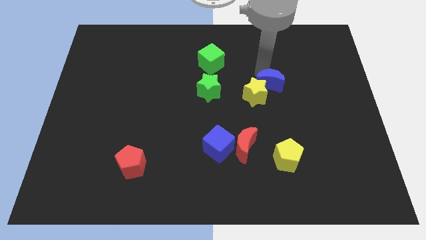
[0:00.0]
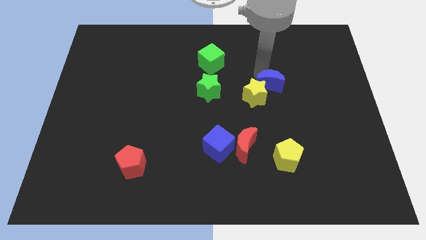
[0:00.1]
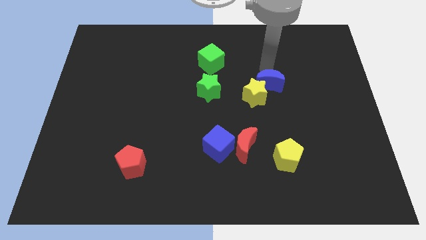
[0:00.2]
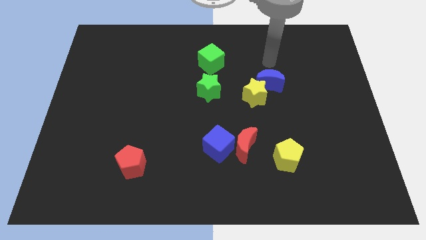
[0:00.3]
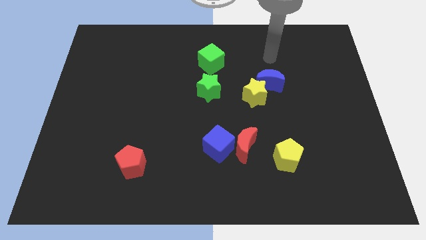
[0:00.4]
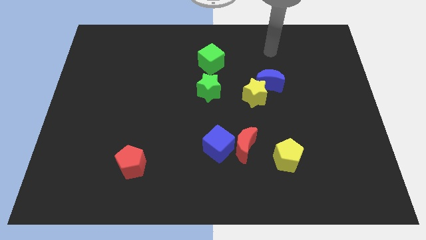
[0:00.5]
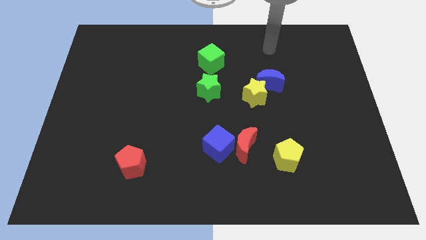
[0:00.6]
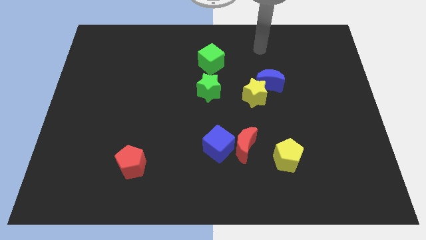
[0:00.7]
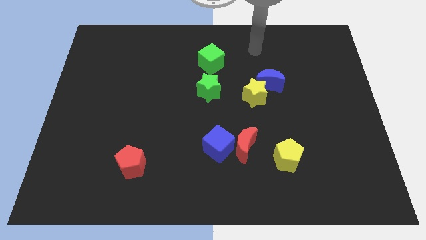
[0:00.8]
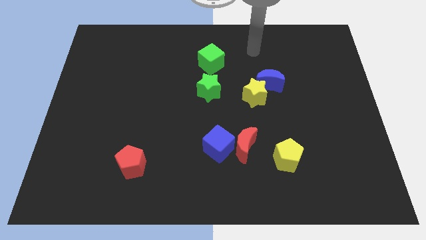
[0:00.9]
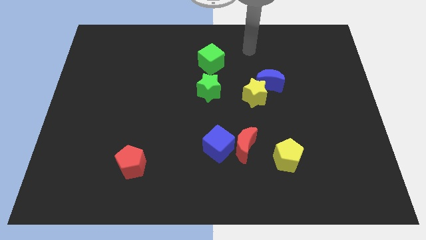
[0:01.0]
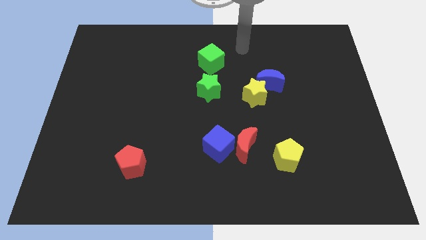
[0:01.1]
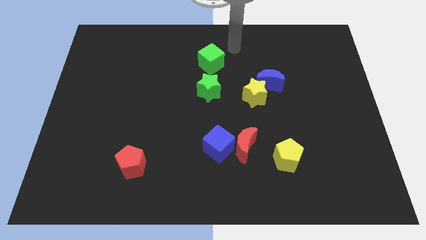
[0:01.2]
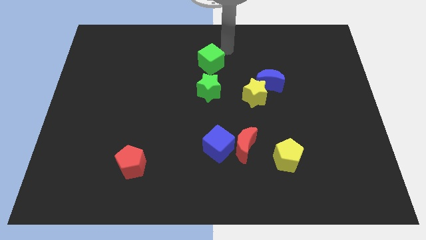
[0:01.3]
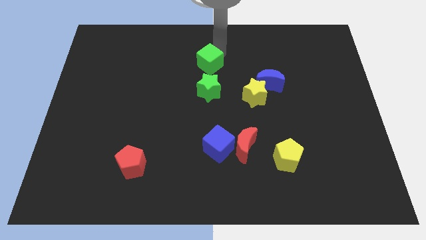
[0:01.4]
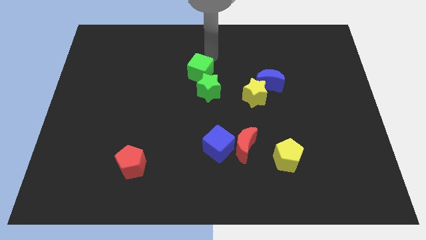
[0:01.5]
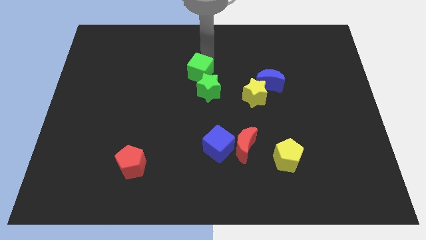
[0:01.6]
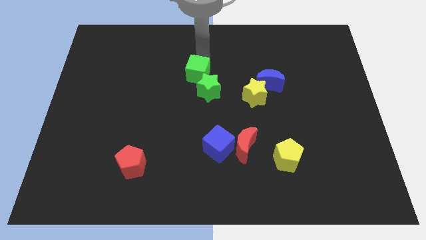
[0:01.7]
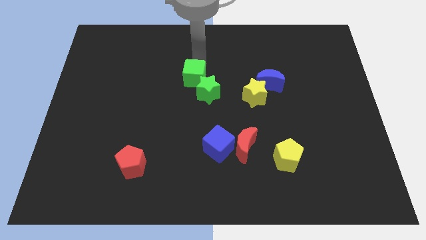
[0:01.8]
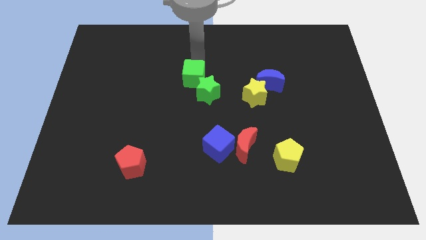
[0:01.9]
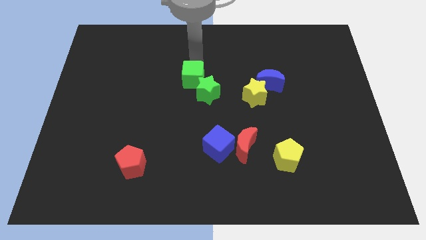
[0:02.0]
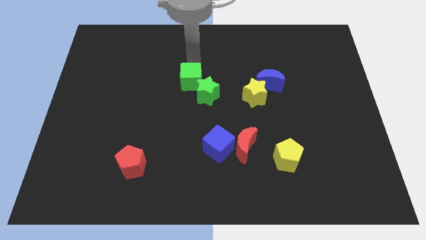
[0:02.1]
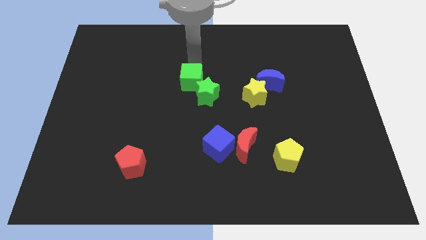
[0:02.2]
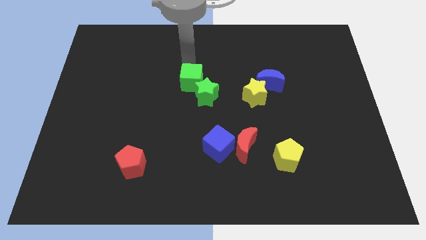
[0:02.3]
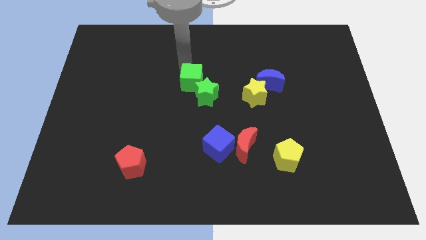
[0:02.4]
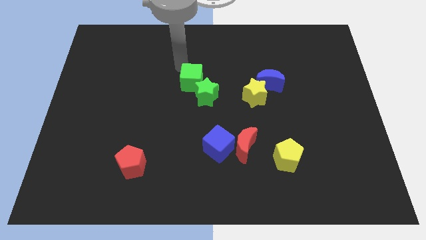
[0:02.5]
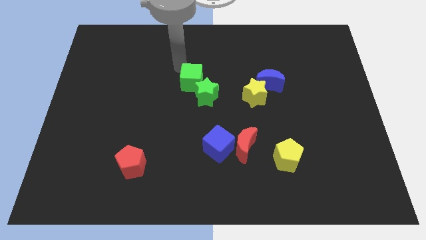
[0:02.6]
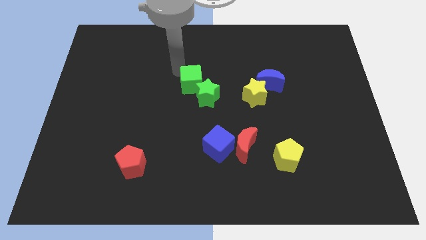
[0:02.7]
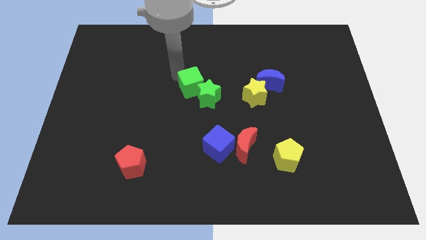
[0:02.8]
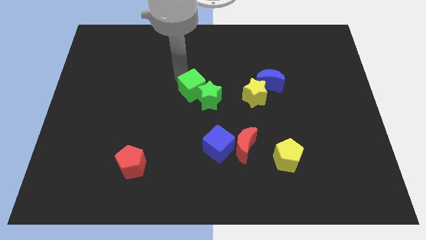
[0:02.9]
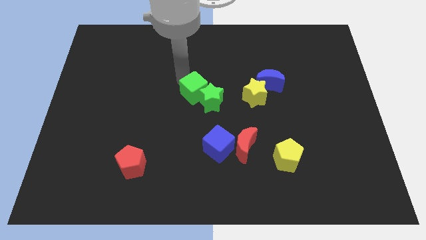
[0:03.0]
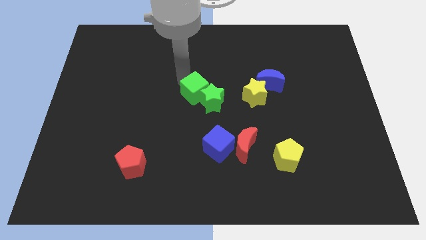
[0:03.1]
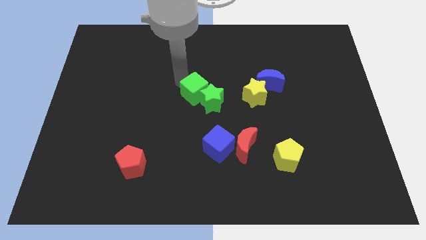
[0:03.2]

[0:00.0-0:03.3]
push green cube into green star

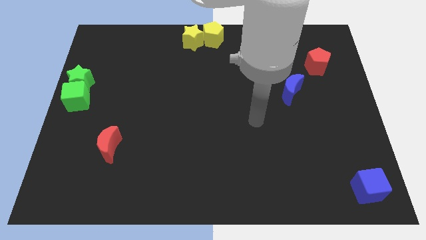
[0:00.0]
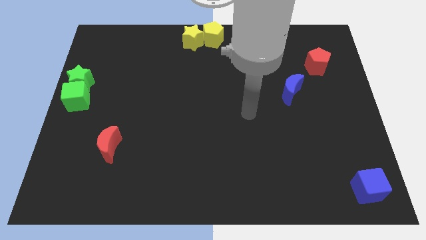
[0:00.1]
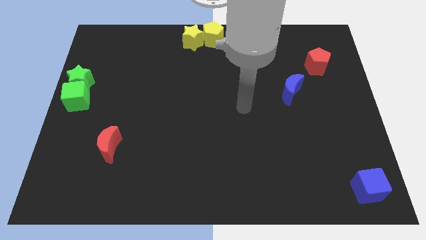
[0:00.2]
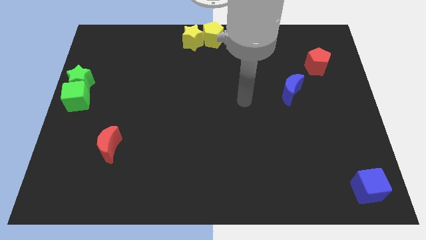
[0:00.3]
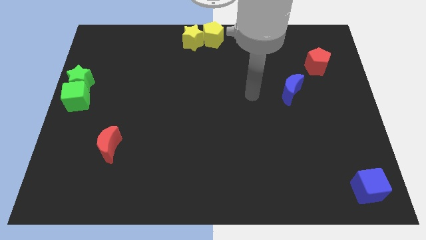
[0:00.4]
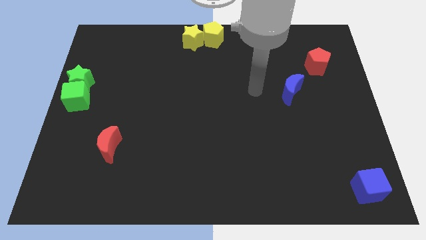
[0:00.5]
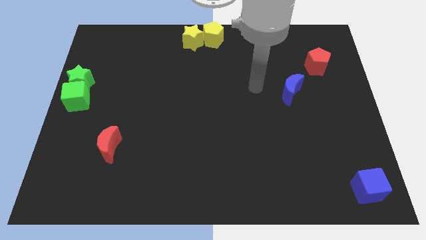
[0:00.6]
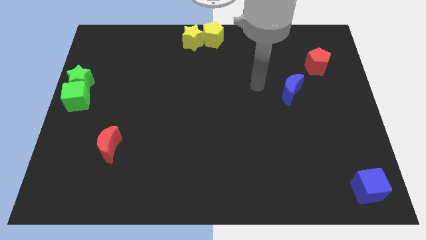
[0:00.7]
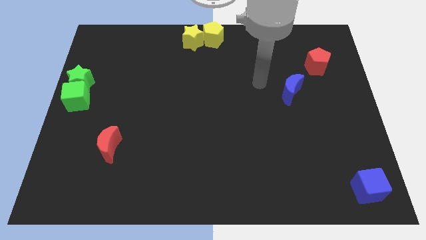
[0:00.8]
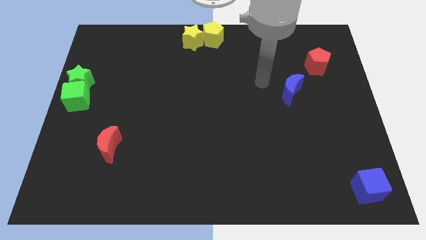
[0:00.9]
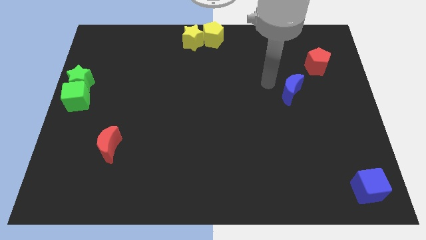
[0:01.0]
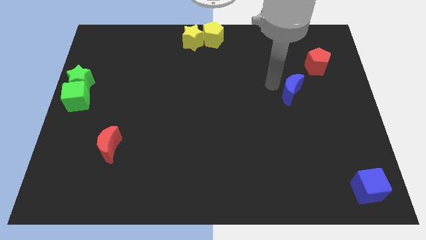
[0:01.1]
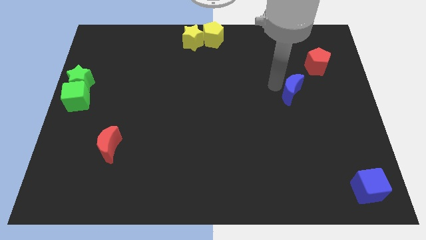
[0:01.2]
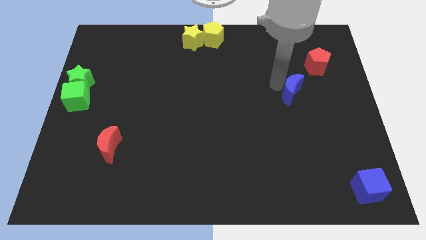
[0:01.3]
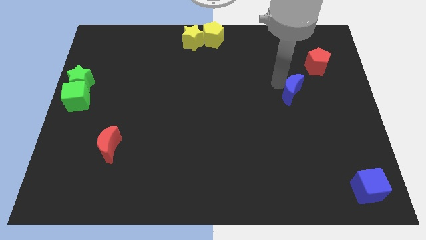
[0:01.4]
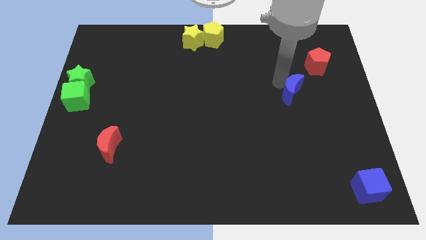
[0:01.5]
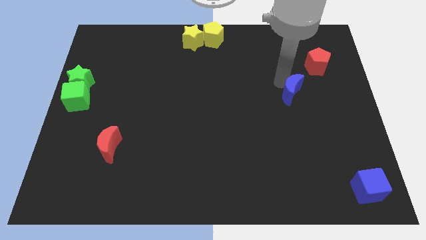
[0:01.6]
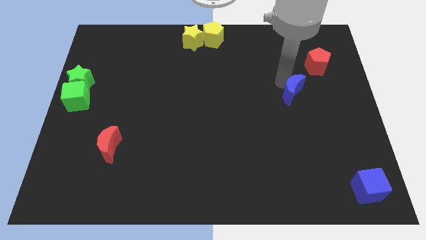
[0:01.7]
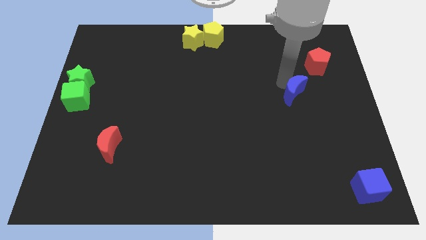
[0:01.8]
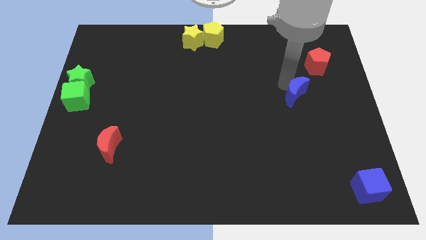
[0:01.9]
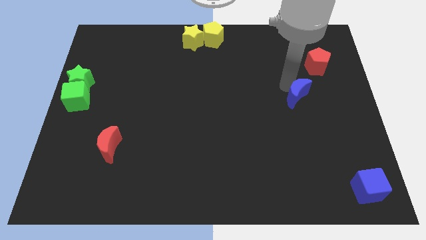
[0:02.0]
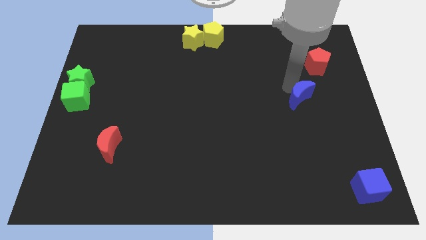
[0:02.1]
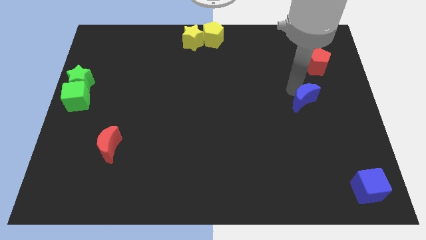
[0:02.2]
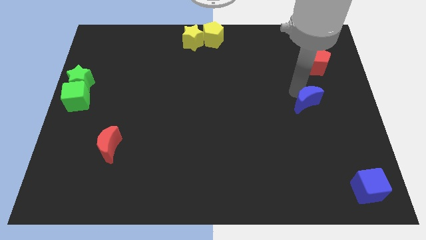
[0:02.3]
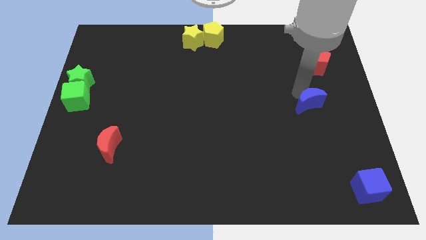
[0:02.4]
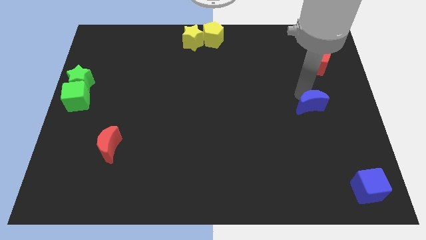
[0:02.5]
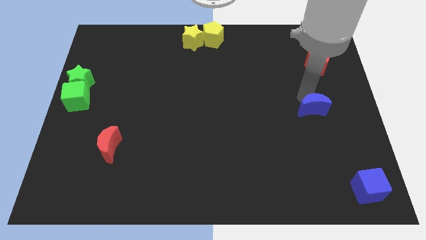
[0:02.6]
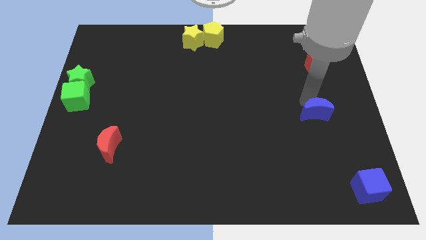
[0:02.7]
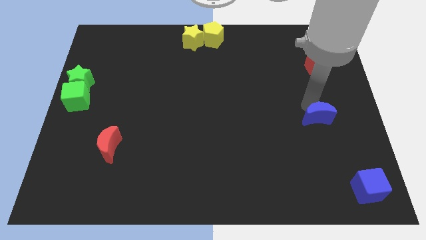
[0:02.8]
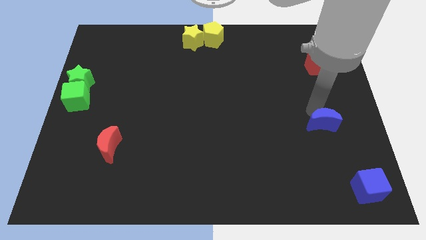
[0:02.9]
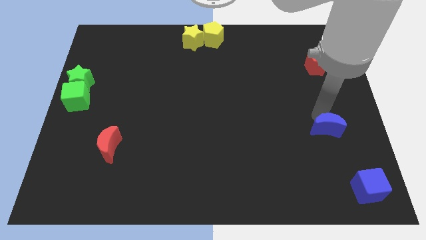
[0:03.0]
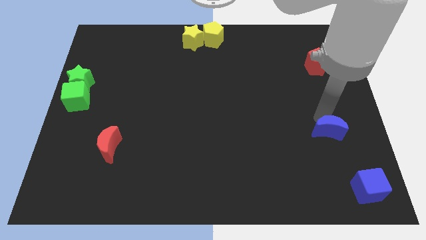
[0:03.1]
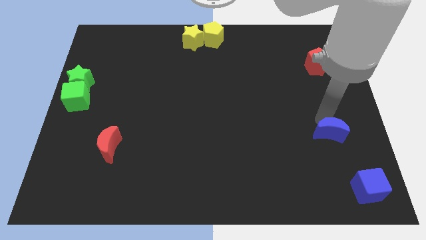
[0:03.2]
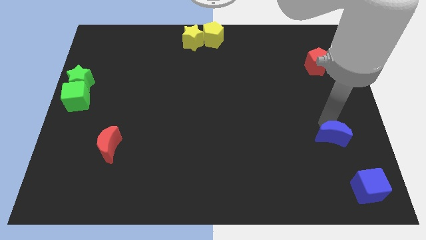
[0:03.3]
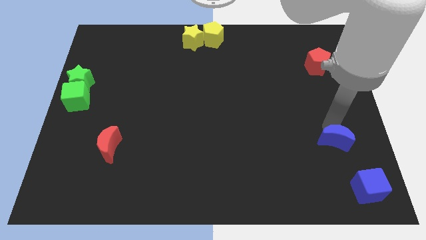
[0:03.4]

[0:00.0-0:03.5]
move the blue semicircle towards the blue cube

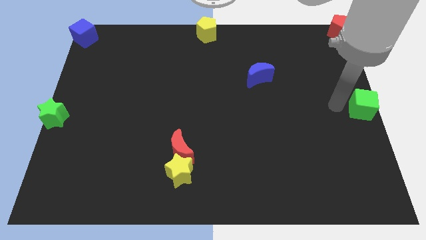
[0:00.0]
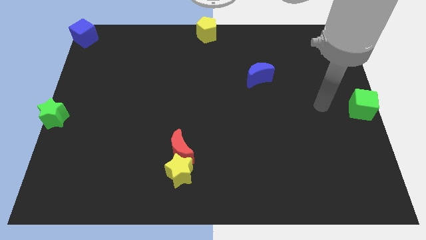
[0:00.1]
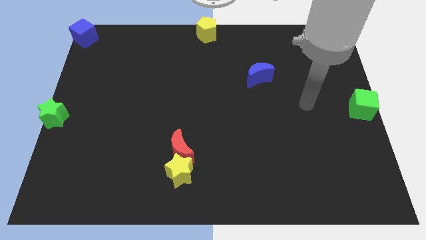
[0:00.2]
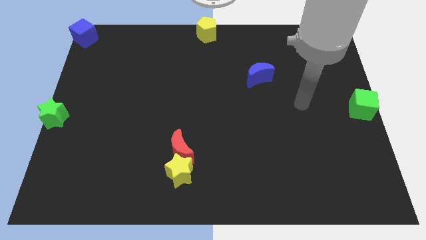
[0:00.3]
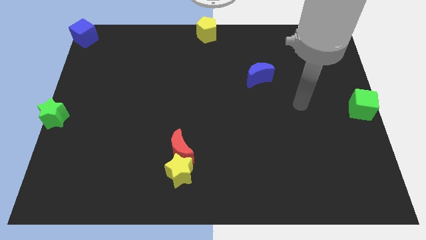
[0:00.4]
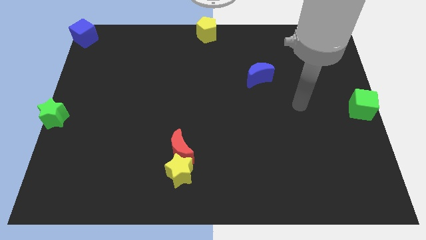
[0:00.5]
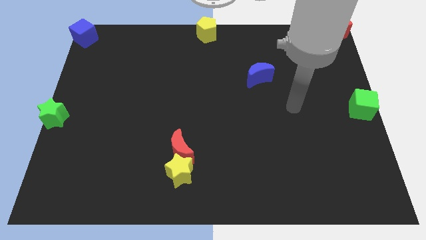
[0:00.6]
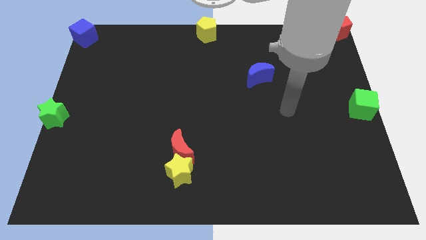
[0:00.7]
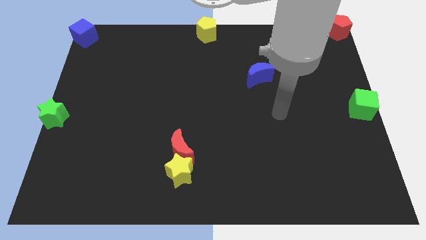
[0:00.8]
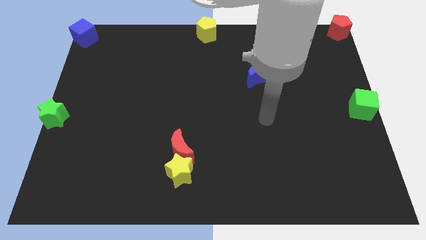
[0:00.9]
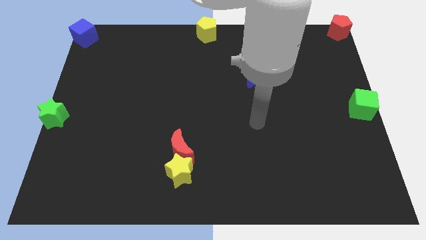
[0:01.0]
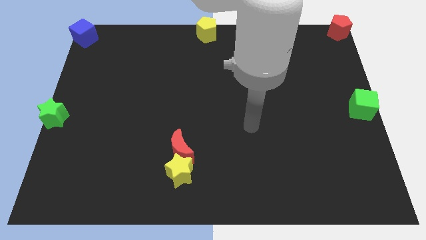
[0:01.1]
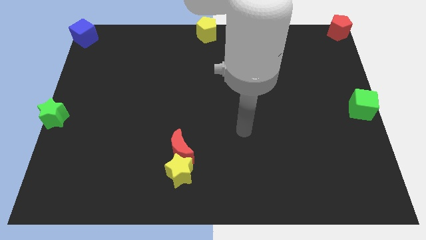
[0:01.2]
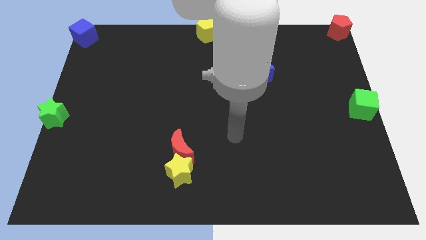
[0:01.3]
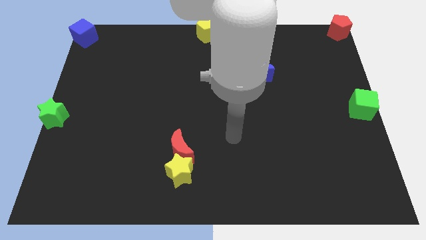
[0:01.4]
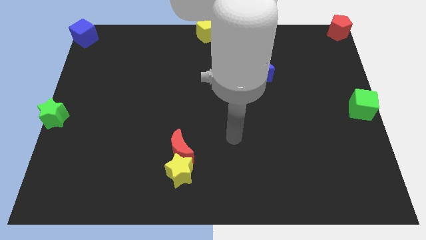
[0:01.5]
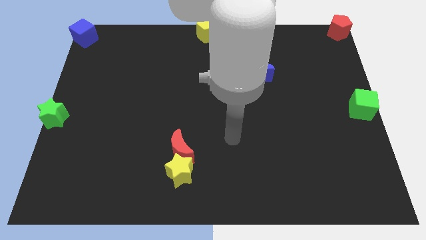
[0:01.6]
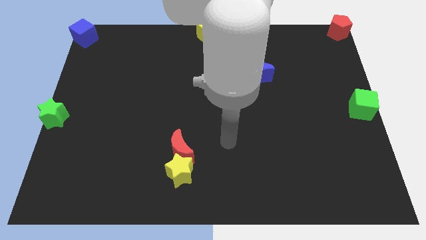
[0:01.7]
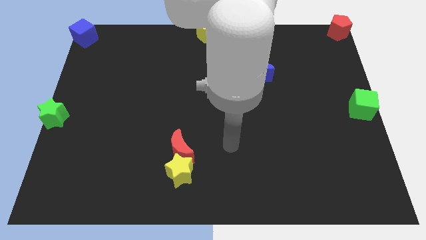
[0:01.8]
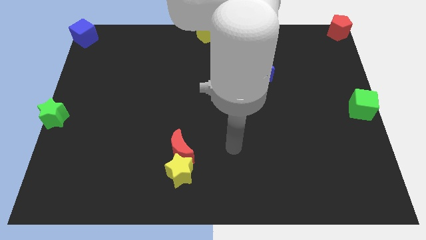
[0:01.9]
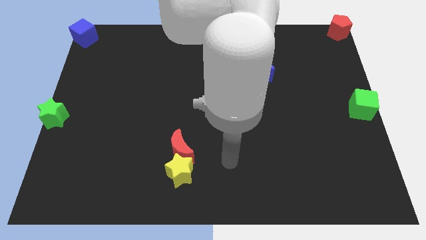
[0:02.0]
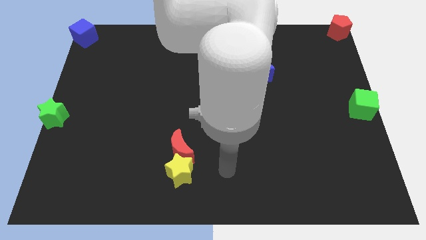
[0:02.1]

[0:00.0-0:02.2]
move your arm away from the green cube
